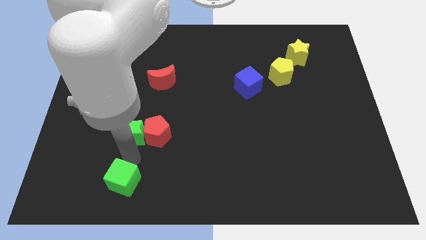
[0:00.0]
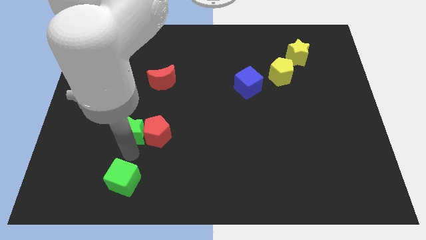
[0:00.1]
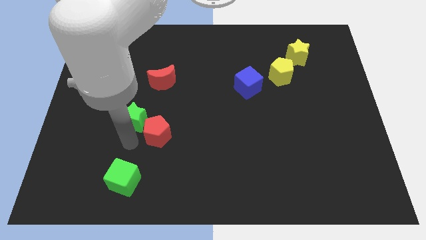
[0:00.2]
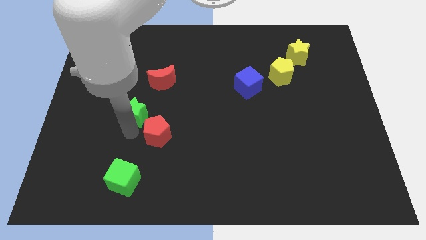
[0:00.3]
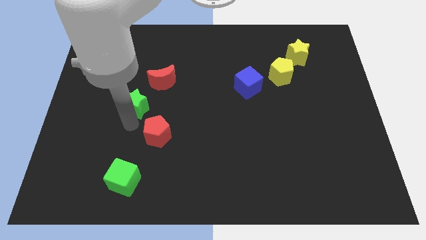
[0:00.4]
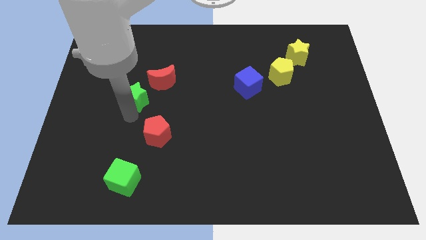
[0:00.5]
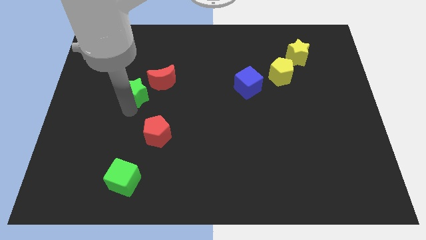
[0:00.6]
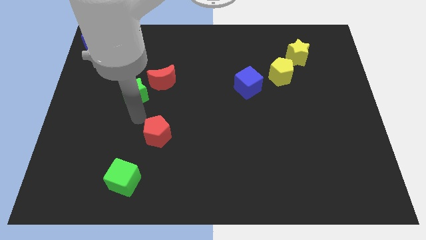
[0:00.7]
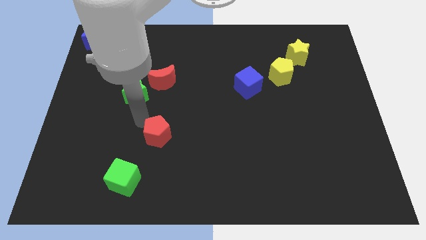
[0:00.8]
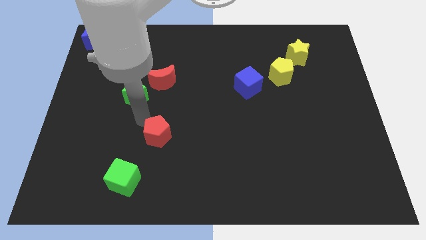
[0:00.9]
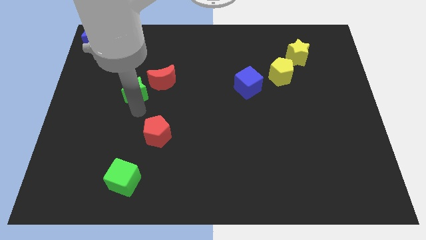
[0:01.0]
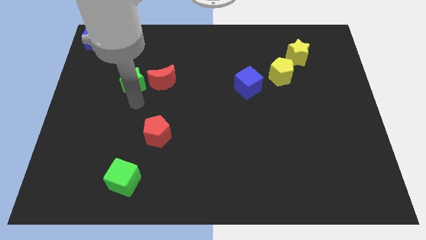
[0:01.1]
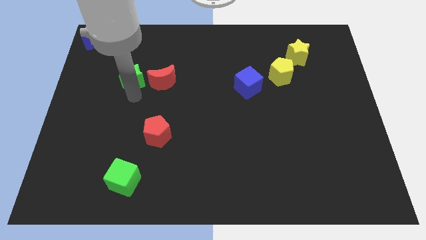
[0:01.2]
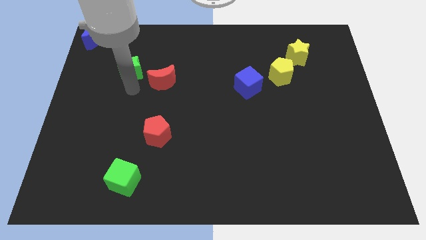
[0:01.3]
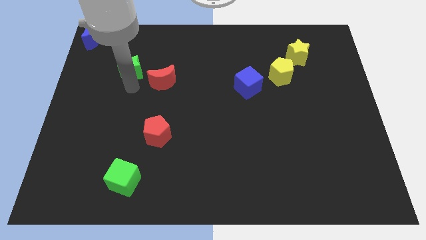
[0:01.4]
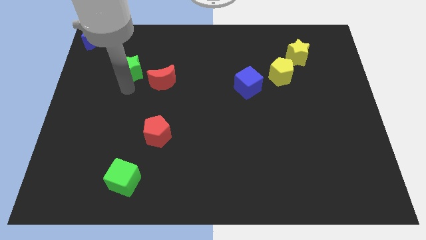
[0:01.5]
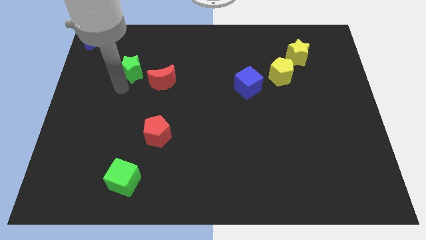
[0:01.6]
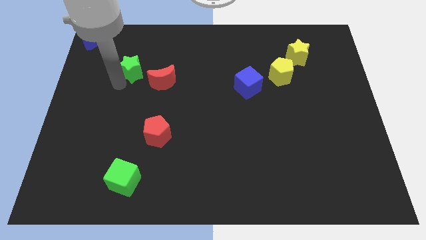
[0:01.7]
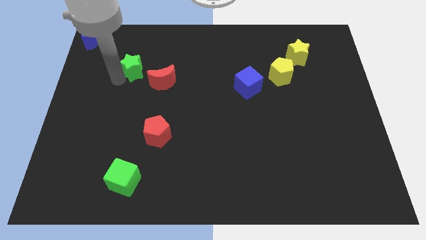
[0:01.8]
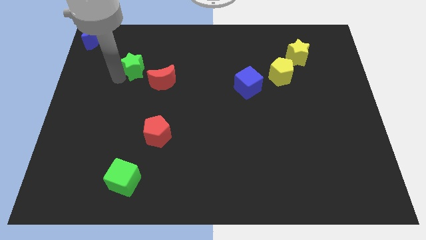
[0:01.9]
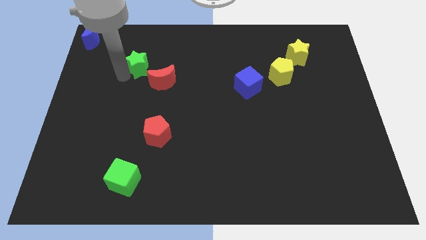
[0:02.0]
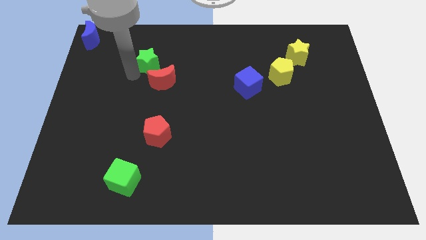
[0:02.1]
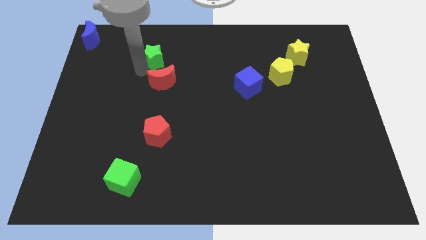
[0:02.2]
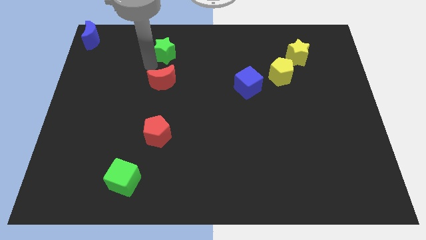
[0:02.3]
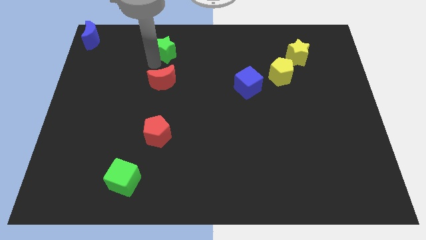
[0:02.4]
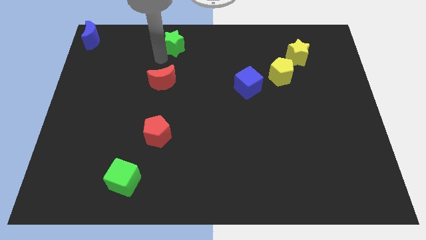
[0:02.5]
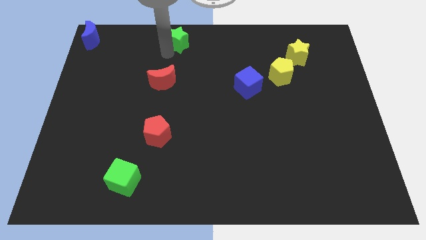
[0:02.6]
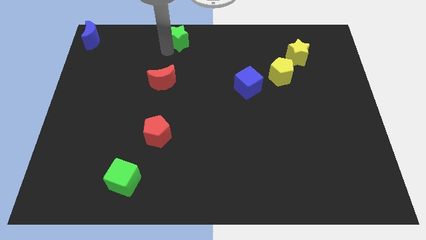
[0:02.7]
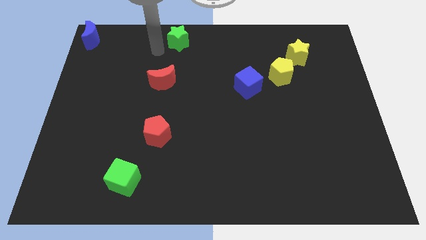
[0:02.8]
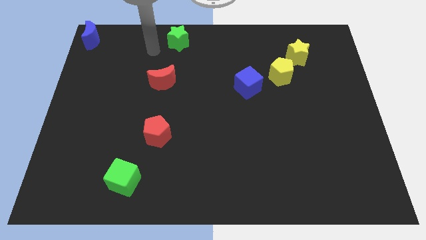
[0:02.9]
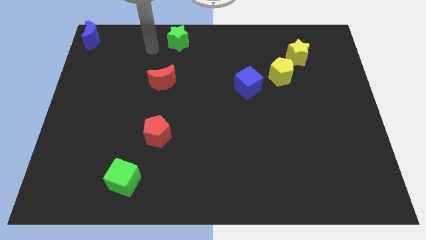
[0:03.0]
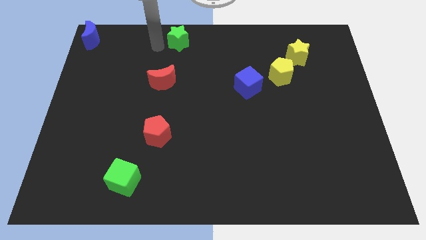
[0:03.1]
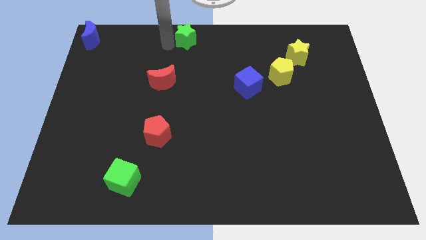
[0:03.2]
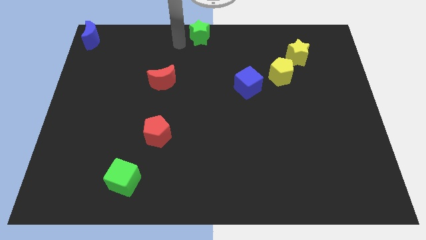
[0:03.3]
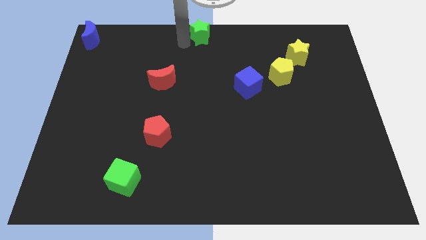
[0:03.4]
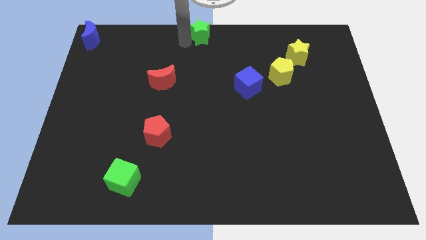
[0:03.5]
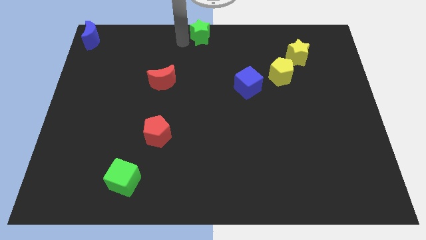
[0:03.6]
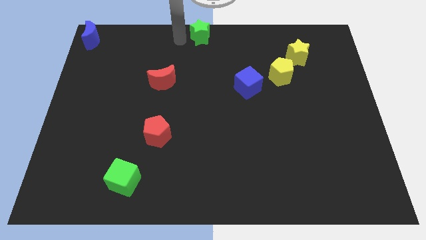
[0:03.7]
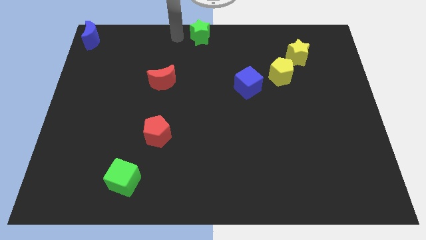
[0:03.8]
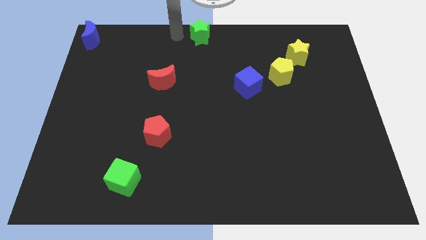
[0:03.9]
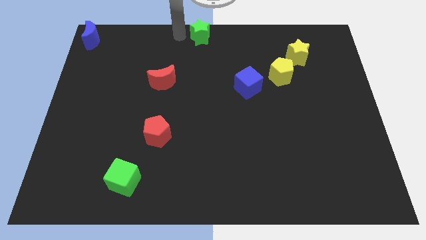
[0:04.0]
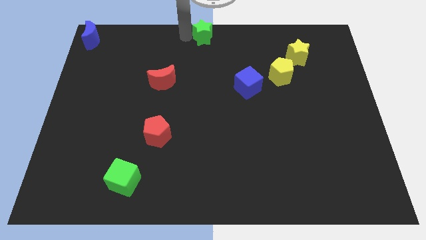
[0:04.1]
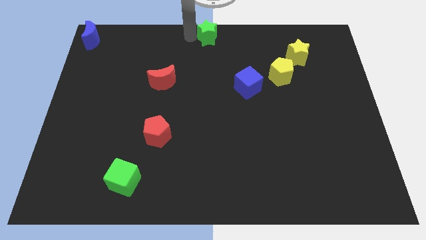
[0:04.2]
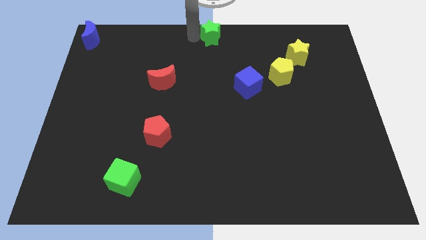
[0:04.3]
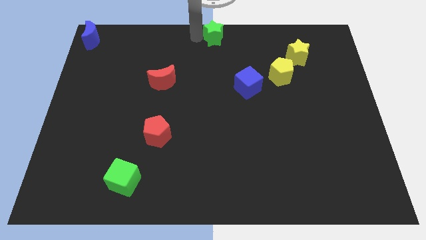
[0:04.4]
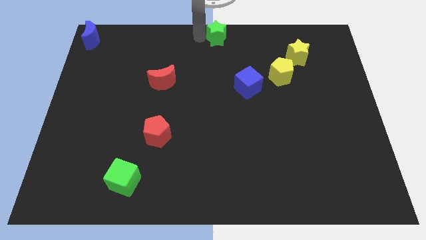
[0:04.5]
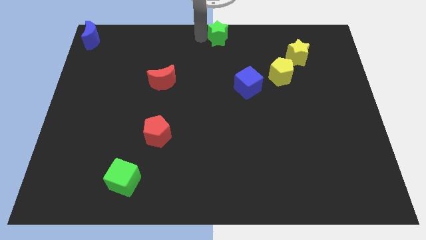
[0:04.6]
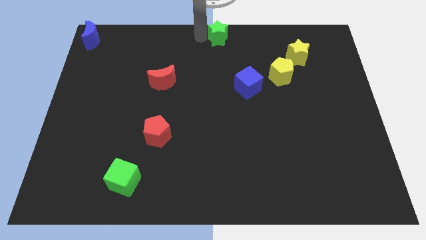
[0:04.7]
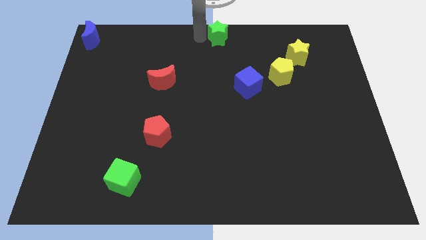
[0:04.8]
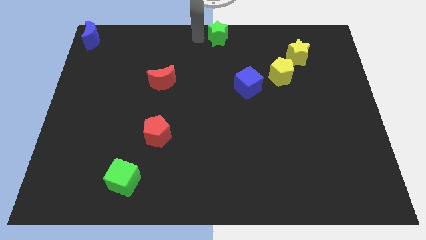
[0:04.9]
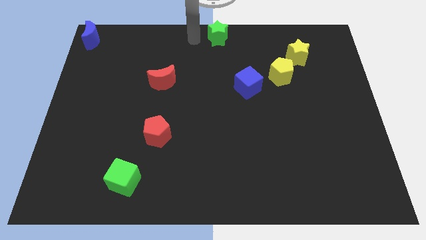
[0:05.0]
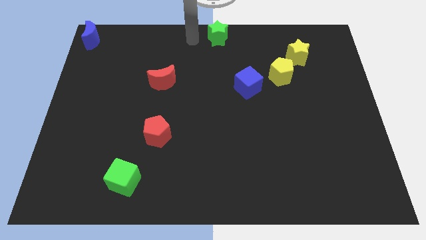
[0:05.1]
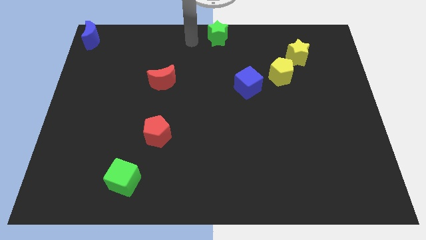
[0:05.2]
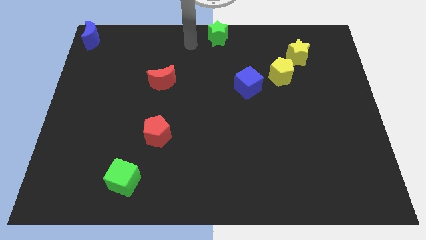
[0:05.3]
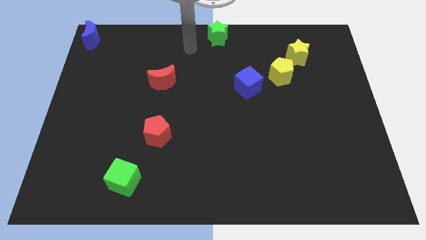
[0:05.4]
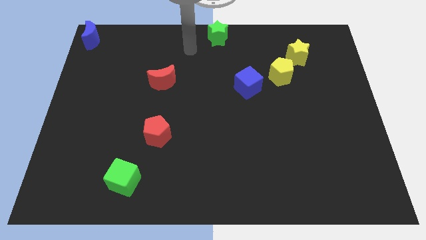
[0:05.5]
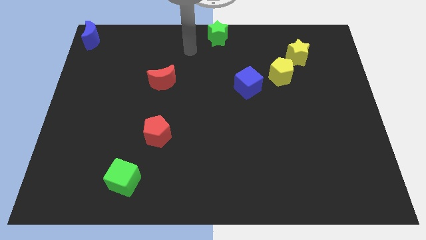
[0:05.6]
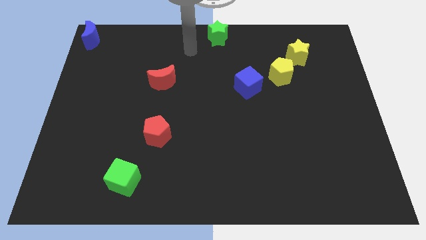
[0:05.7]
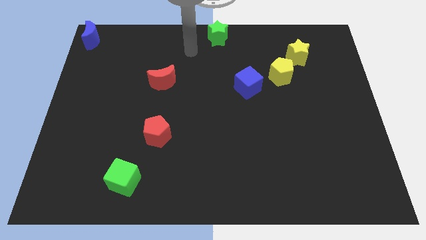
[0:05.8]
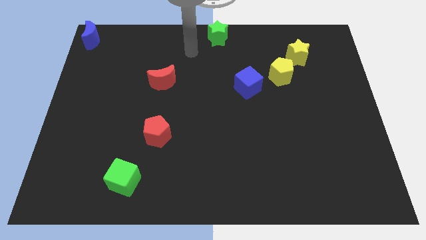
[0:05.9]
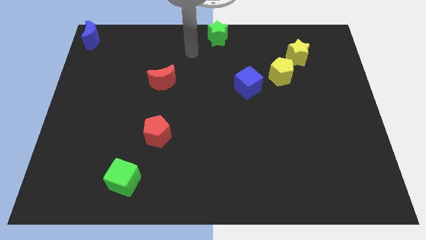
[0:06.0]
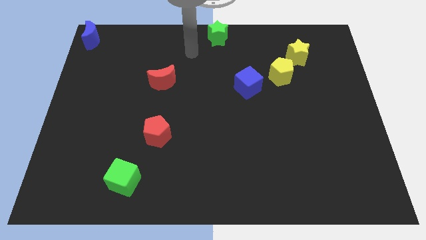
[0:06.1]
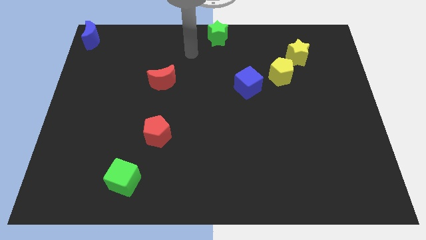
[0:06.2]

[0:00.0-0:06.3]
place the green star at the top center of the board

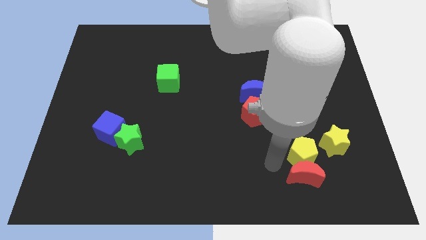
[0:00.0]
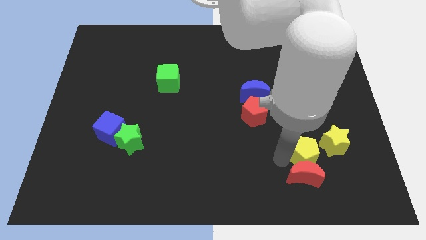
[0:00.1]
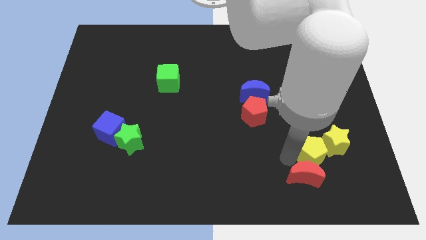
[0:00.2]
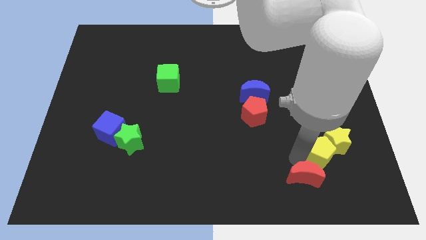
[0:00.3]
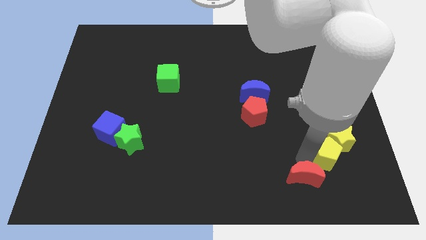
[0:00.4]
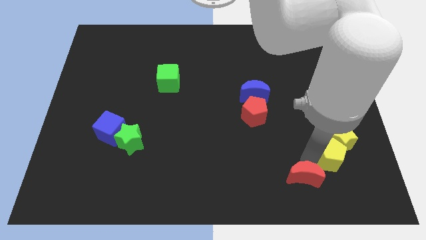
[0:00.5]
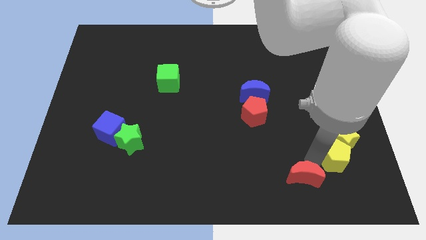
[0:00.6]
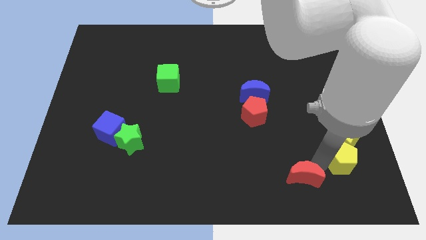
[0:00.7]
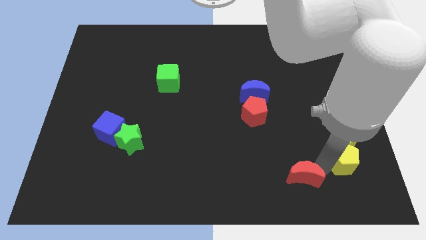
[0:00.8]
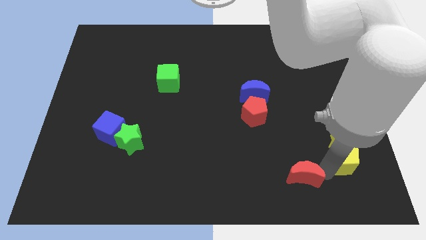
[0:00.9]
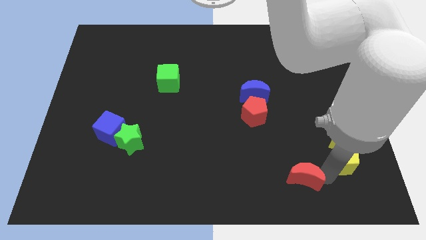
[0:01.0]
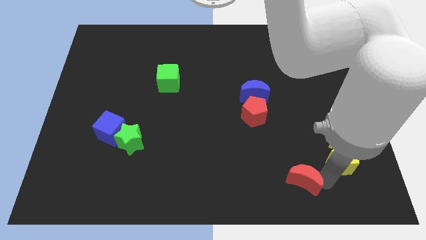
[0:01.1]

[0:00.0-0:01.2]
point your arm between red moon and yellow pentagon

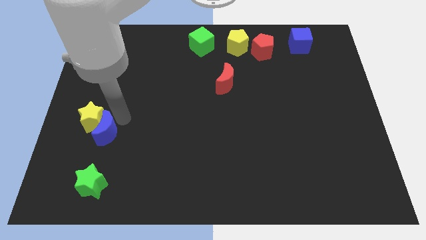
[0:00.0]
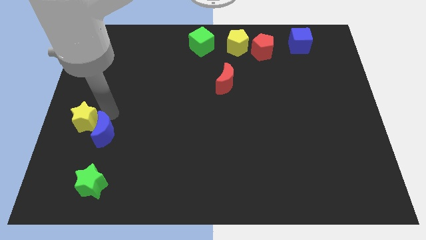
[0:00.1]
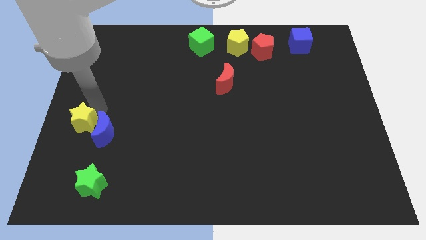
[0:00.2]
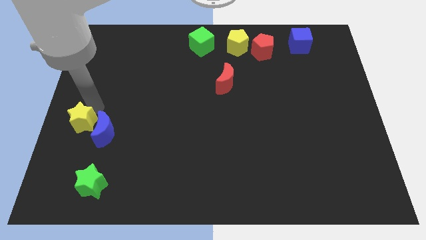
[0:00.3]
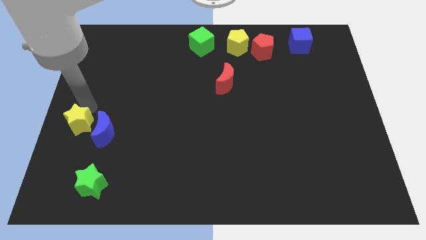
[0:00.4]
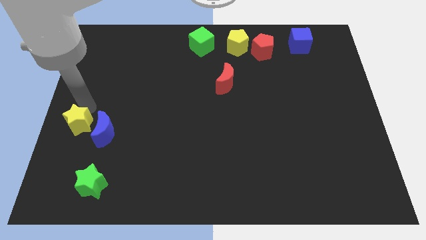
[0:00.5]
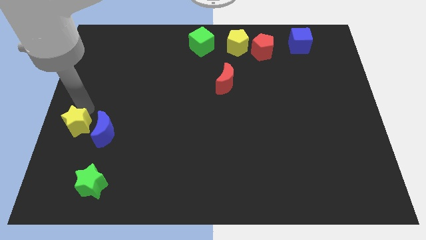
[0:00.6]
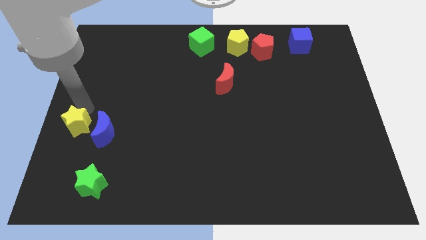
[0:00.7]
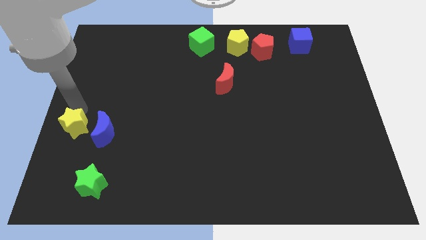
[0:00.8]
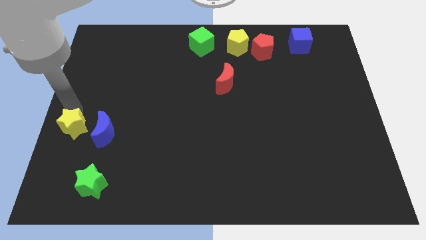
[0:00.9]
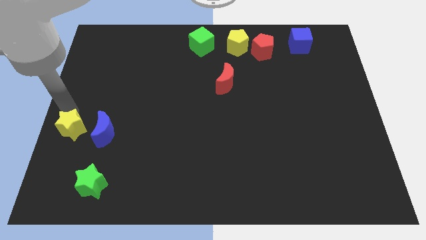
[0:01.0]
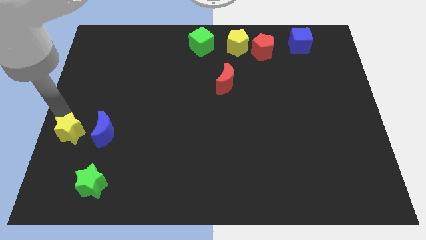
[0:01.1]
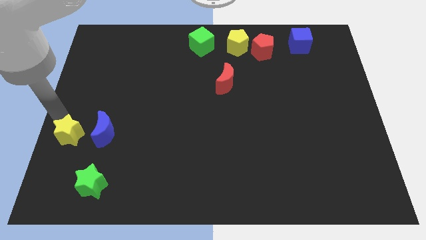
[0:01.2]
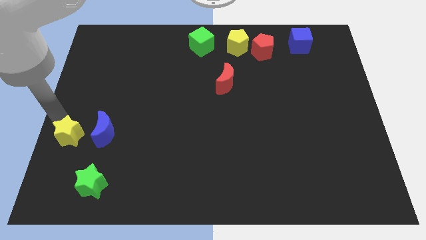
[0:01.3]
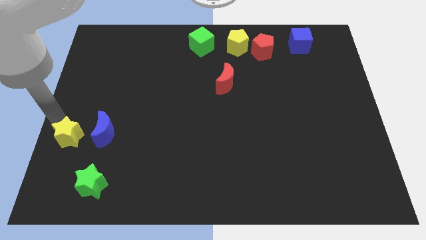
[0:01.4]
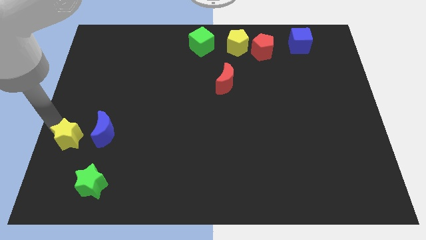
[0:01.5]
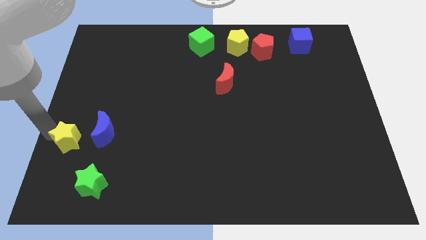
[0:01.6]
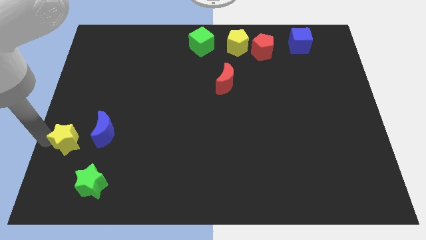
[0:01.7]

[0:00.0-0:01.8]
separate the yellow star from the blue crescent
